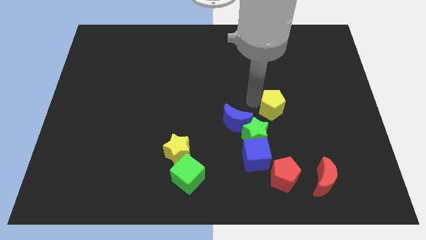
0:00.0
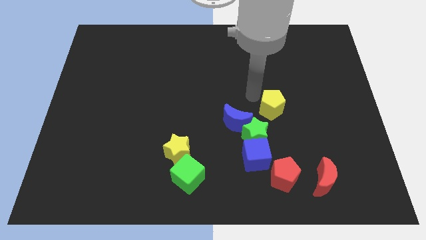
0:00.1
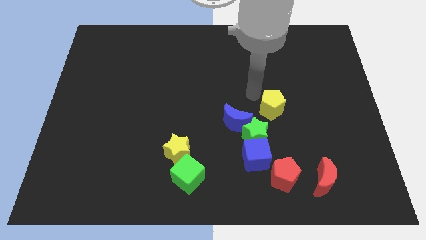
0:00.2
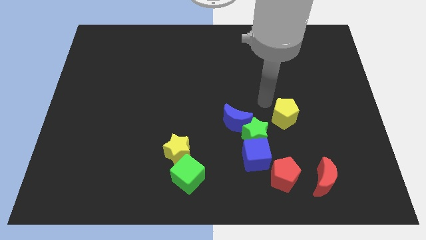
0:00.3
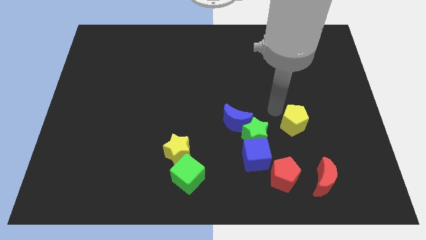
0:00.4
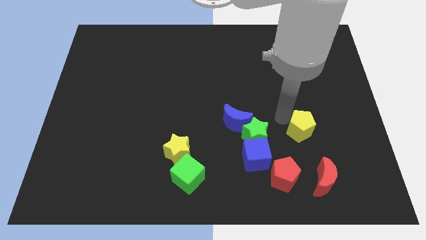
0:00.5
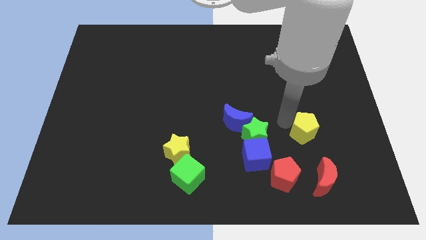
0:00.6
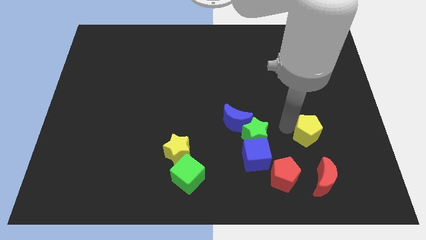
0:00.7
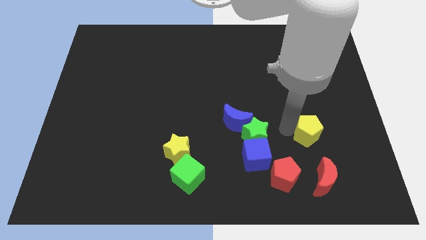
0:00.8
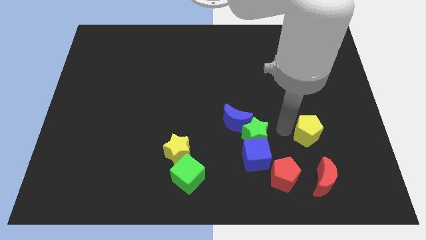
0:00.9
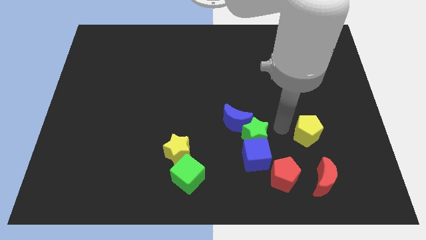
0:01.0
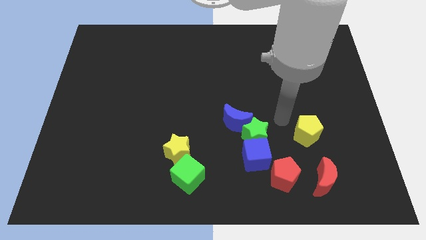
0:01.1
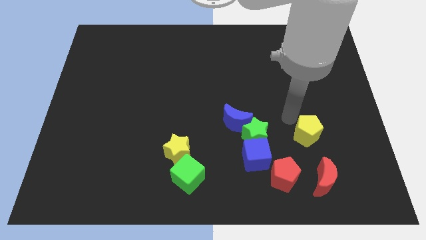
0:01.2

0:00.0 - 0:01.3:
move the yellow pentagon to the right of the green star

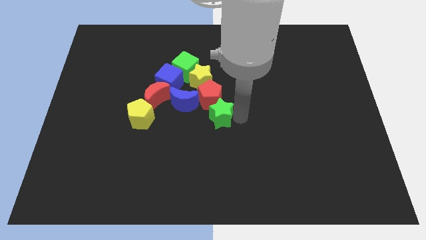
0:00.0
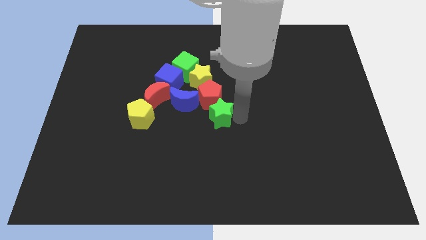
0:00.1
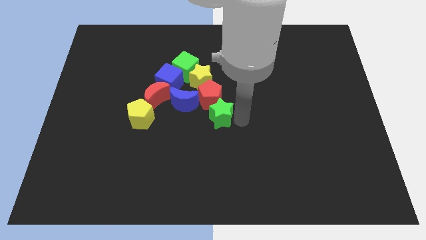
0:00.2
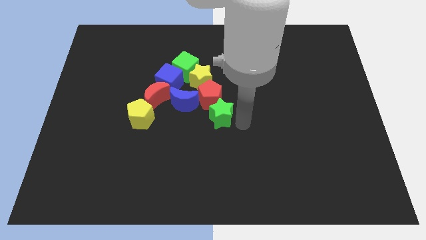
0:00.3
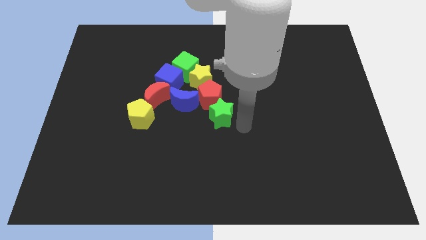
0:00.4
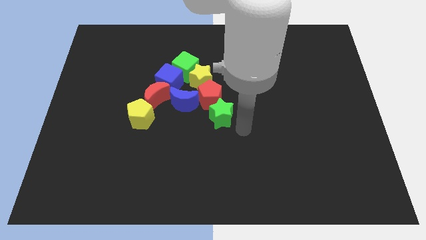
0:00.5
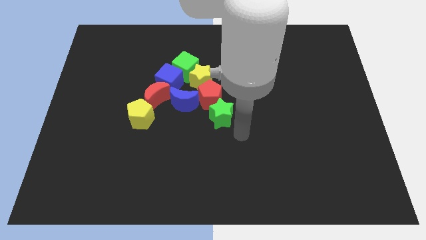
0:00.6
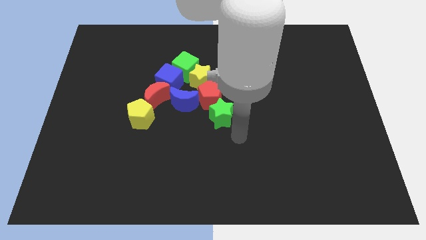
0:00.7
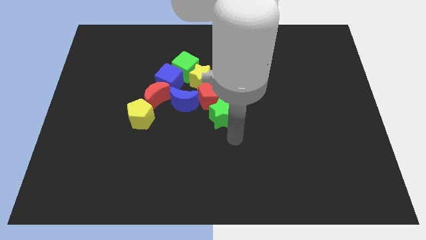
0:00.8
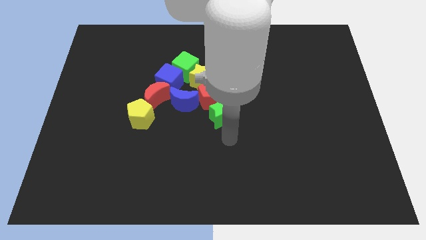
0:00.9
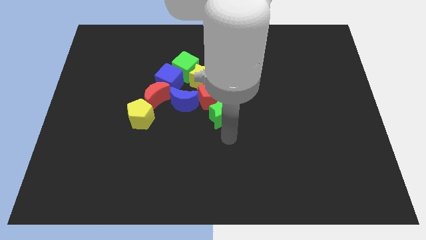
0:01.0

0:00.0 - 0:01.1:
place the green star below the red pentagon

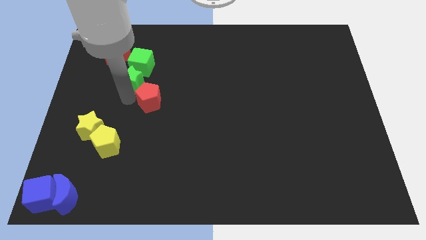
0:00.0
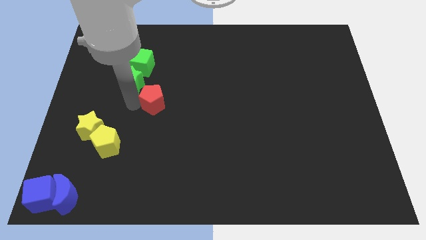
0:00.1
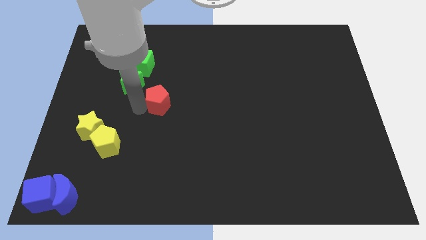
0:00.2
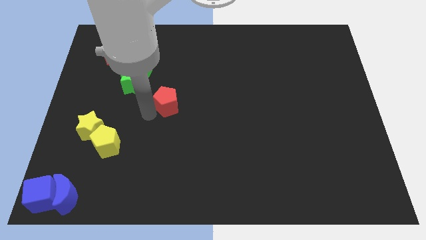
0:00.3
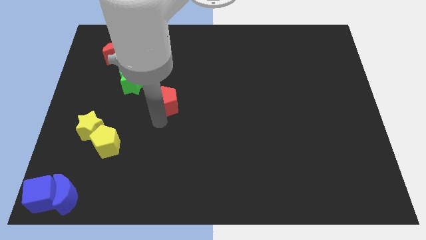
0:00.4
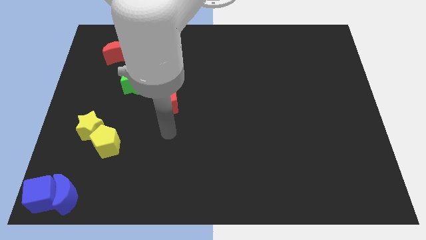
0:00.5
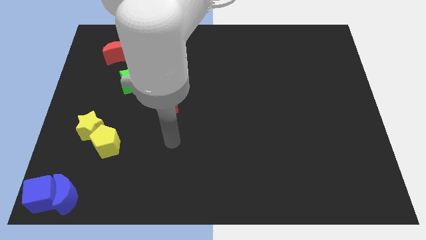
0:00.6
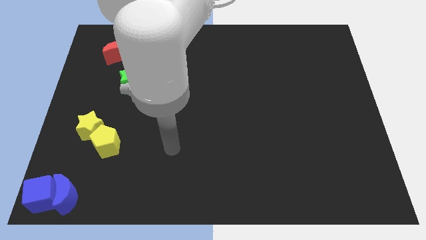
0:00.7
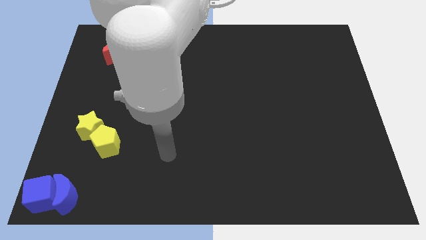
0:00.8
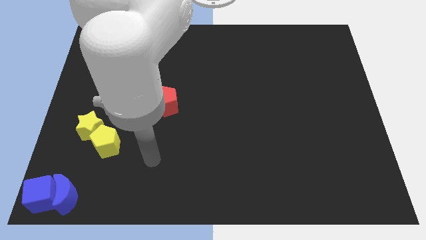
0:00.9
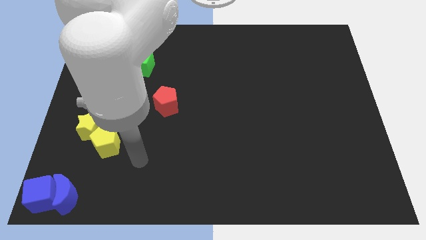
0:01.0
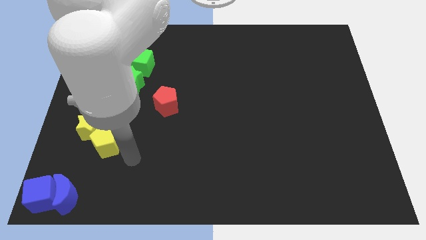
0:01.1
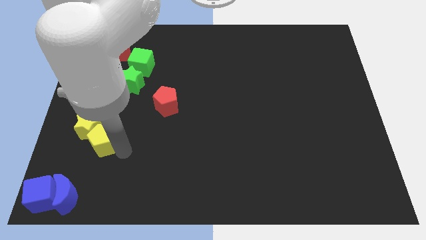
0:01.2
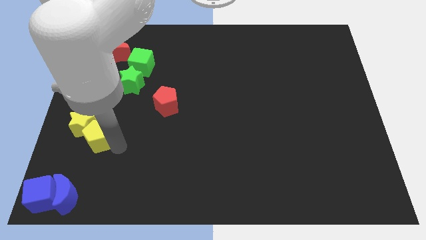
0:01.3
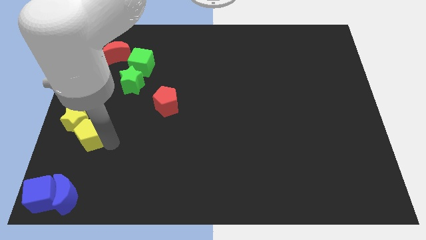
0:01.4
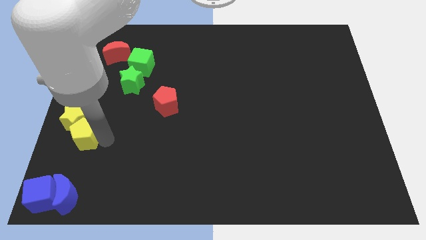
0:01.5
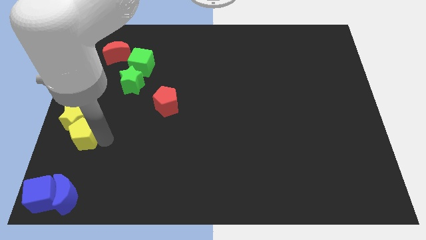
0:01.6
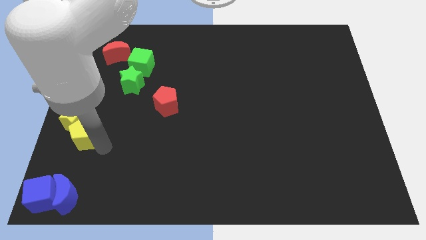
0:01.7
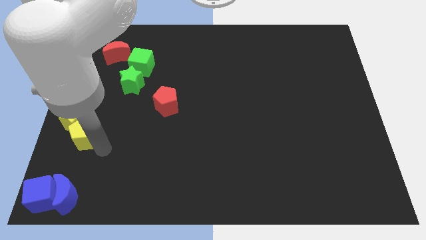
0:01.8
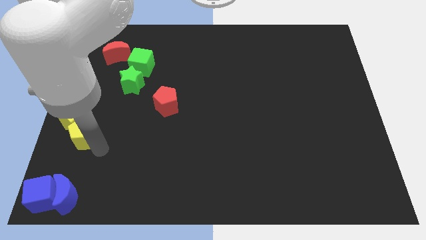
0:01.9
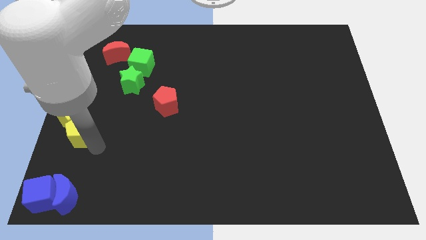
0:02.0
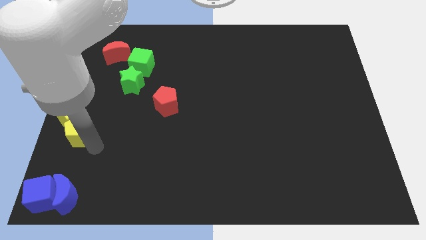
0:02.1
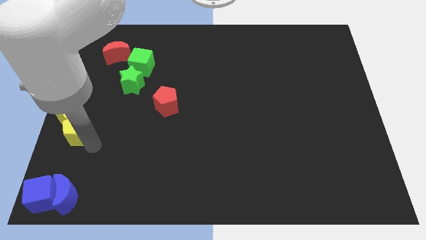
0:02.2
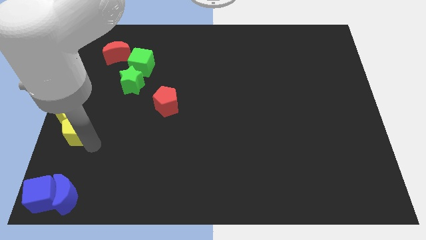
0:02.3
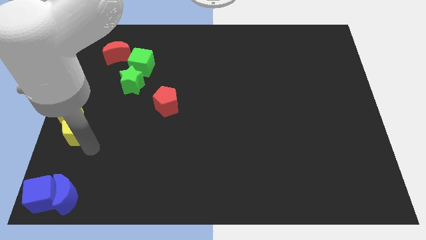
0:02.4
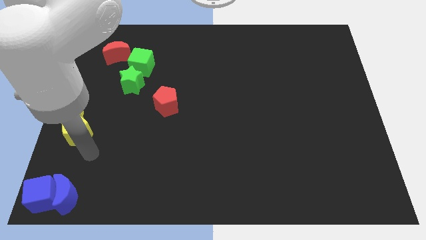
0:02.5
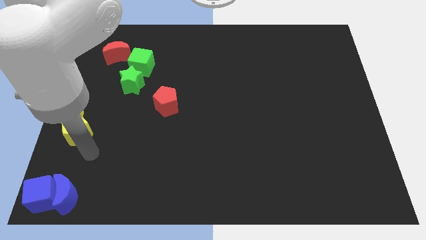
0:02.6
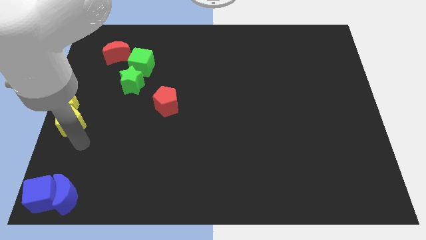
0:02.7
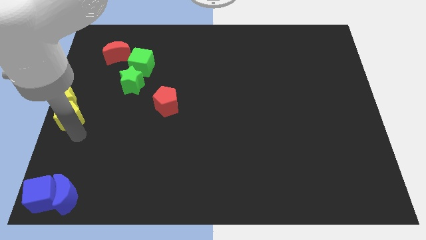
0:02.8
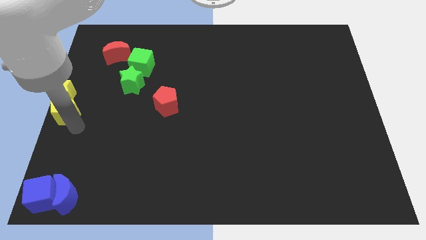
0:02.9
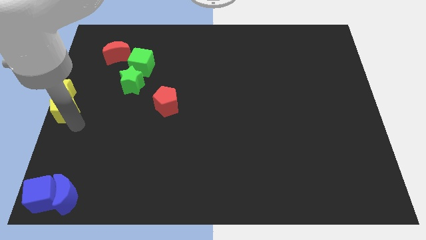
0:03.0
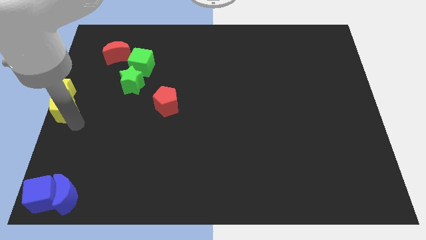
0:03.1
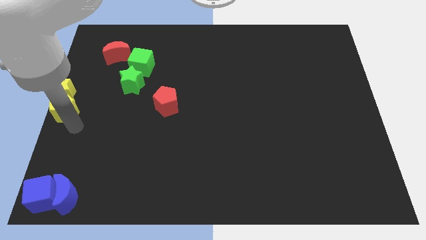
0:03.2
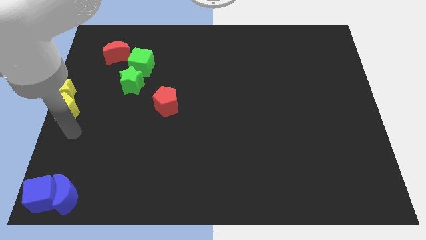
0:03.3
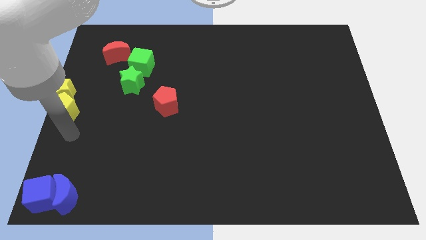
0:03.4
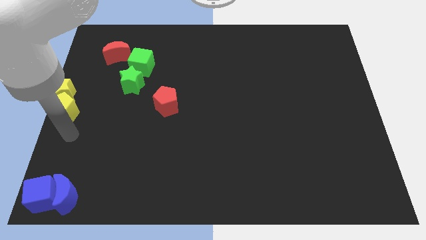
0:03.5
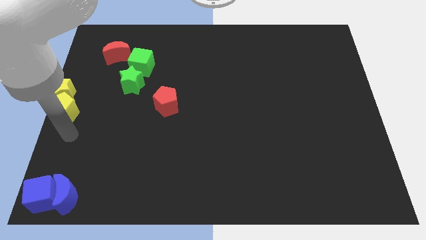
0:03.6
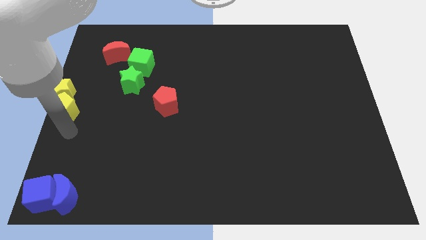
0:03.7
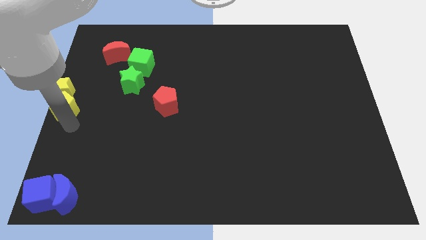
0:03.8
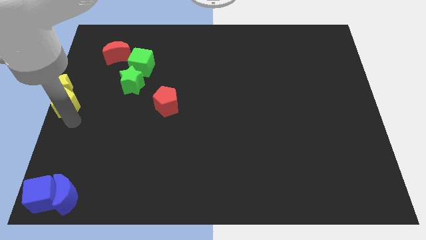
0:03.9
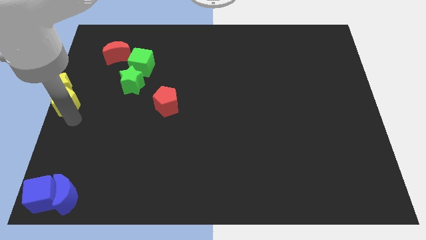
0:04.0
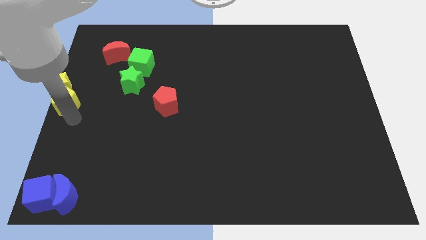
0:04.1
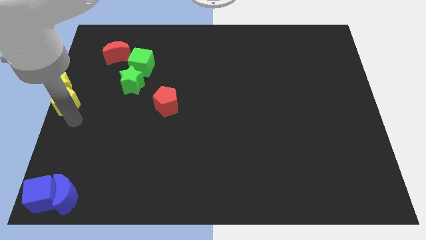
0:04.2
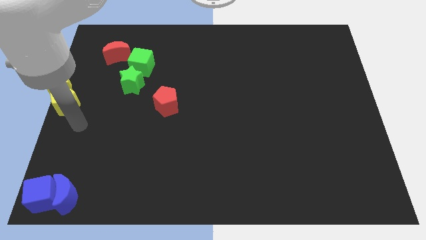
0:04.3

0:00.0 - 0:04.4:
move the yellow blocks to the left side of the table

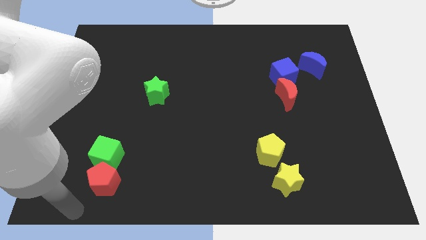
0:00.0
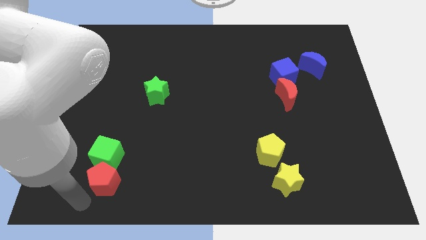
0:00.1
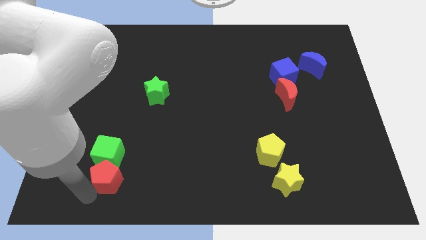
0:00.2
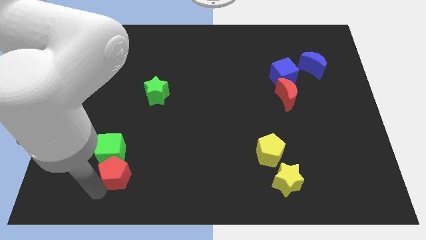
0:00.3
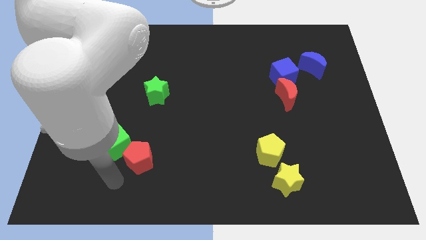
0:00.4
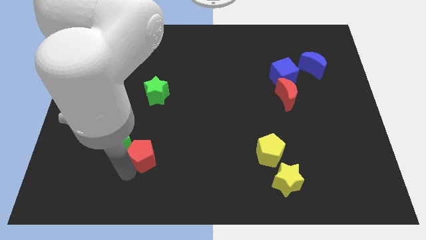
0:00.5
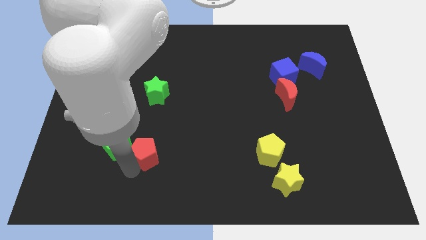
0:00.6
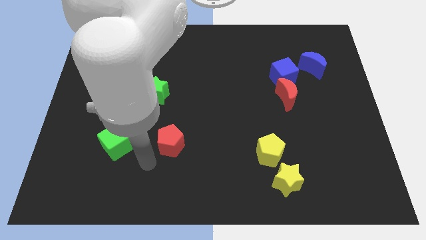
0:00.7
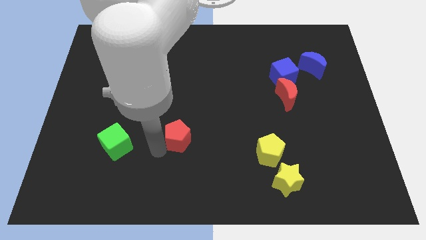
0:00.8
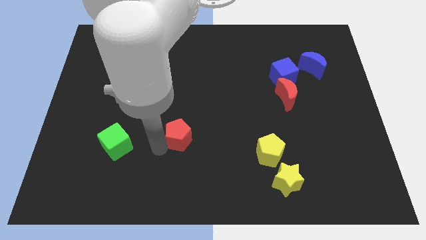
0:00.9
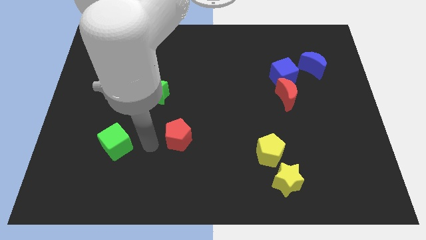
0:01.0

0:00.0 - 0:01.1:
separate the red pentagon and green cube

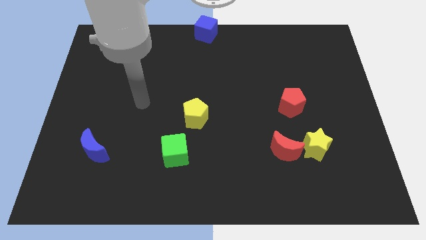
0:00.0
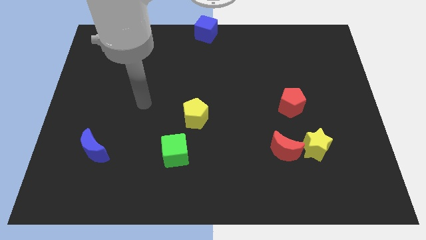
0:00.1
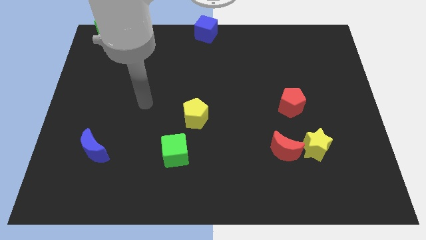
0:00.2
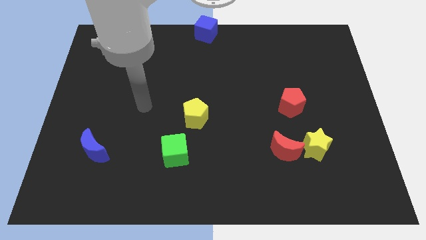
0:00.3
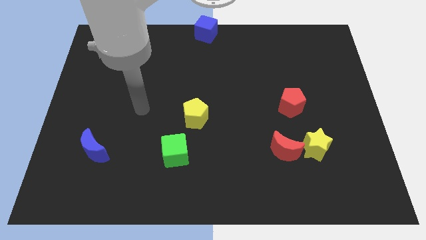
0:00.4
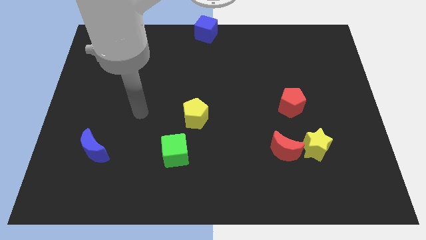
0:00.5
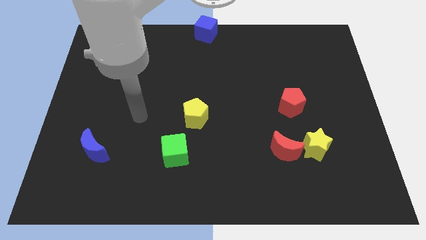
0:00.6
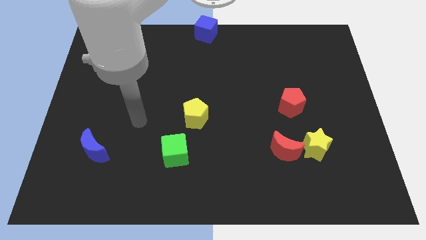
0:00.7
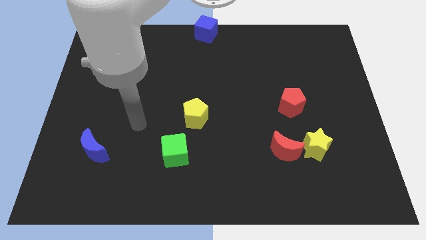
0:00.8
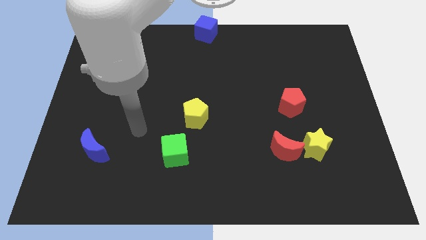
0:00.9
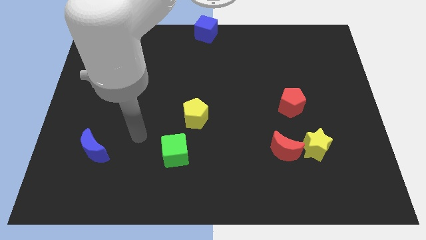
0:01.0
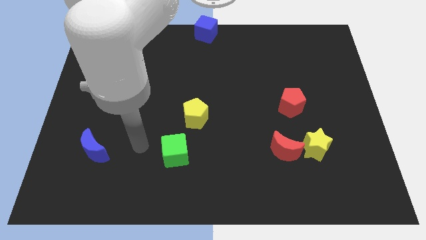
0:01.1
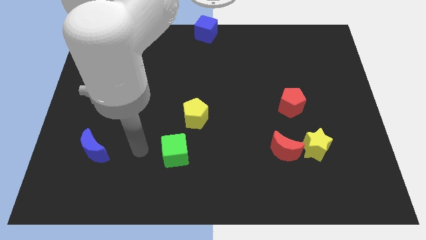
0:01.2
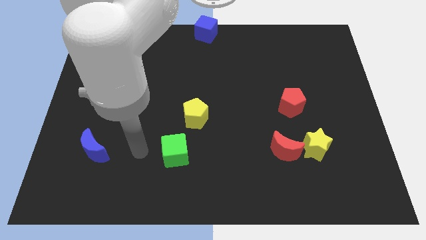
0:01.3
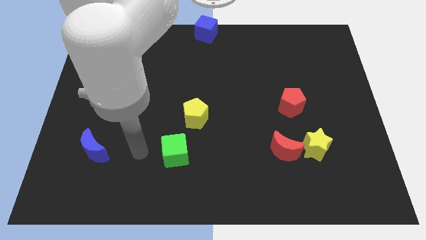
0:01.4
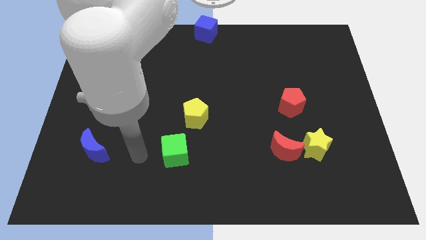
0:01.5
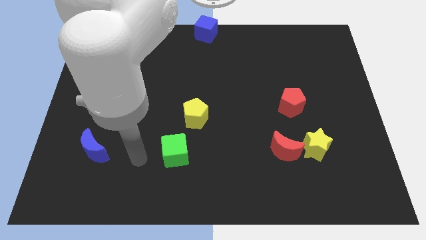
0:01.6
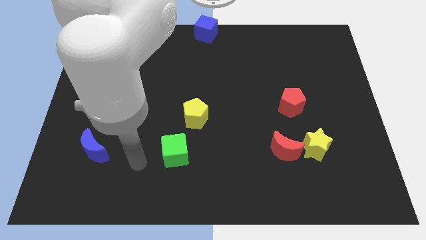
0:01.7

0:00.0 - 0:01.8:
point your hand at the left side of the green cube
